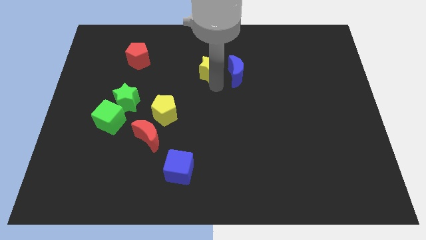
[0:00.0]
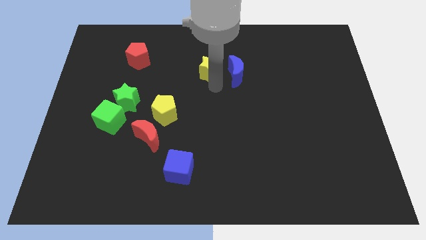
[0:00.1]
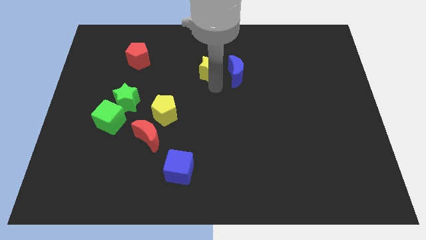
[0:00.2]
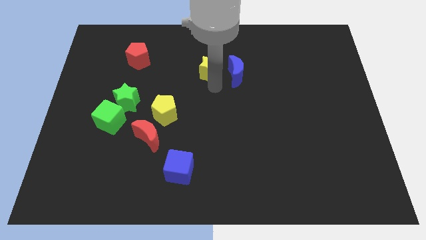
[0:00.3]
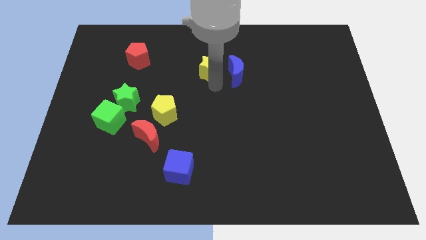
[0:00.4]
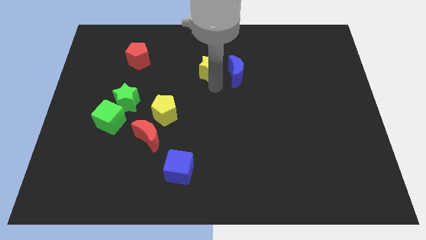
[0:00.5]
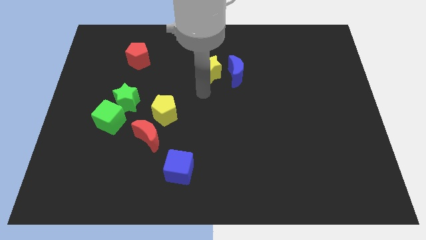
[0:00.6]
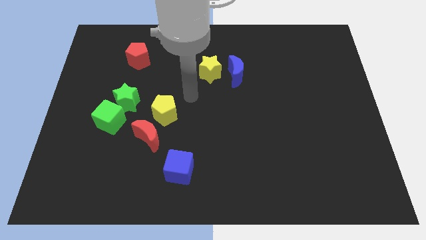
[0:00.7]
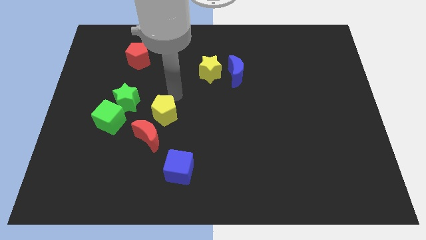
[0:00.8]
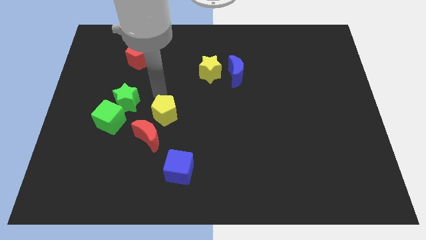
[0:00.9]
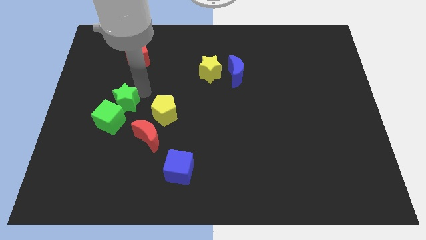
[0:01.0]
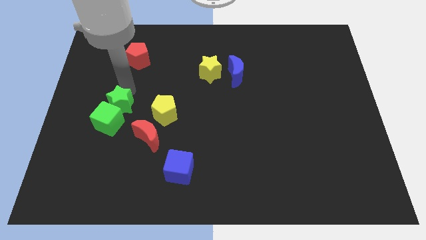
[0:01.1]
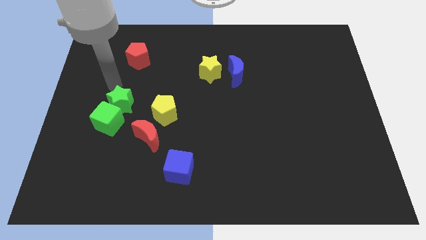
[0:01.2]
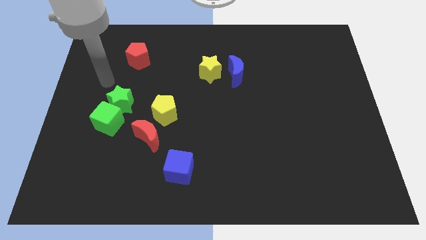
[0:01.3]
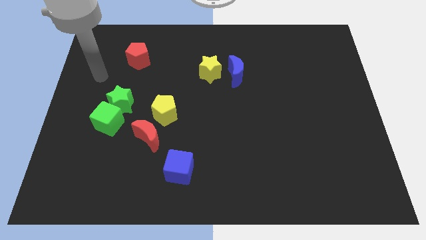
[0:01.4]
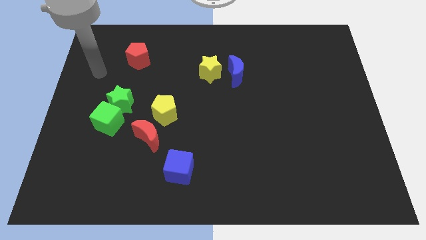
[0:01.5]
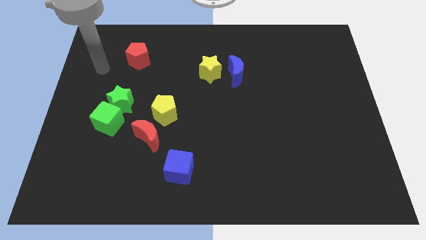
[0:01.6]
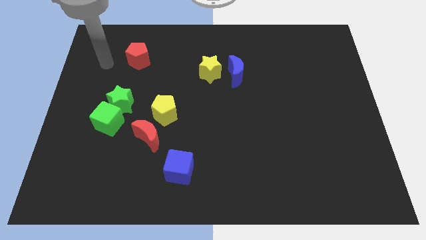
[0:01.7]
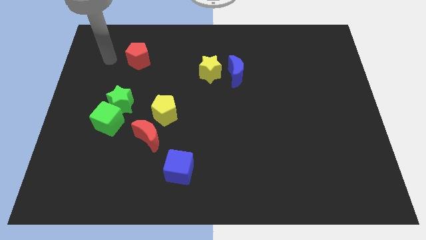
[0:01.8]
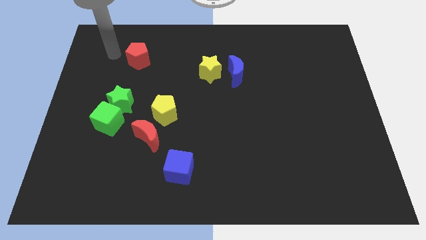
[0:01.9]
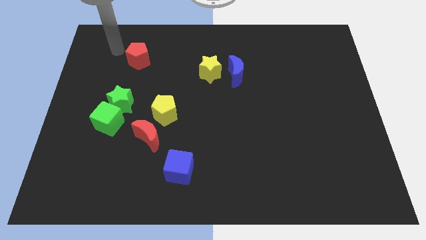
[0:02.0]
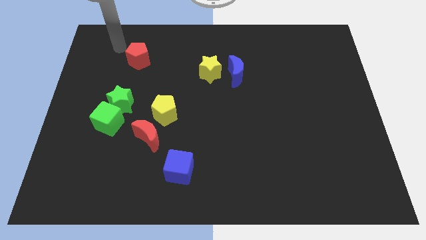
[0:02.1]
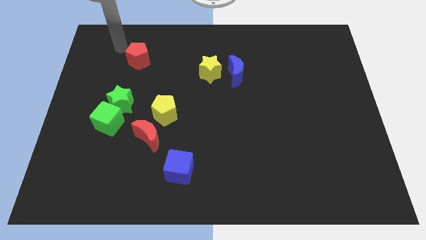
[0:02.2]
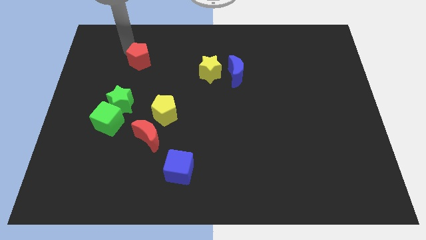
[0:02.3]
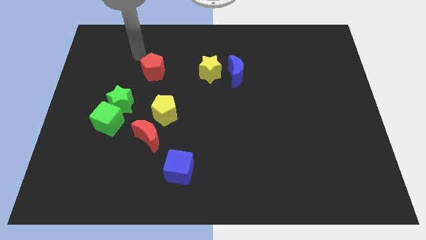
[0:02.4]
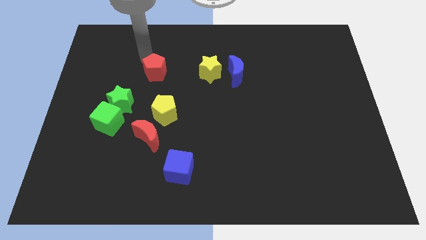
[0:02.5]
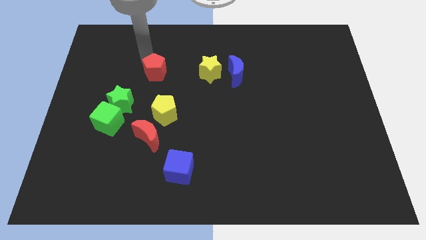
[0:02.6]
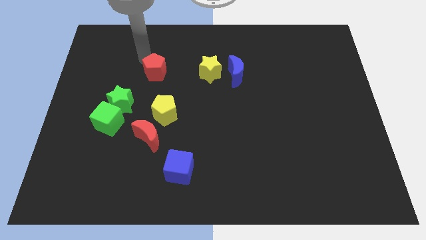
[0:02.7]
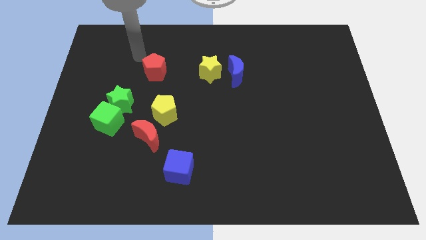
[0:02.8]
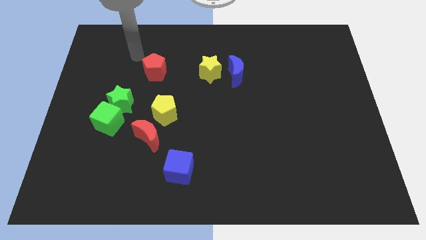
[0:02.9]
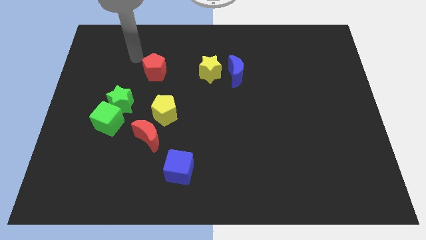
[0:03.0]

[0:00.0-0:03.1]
slide red pentagon towards yellow pentagon

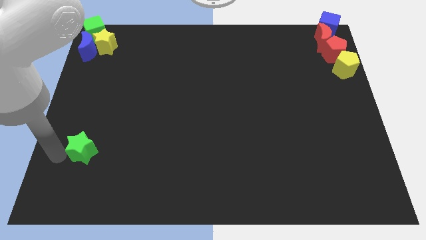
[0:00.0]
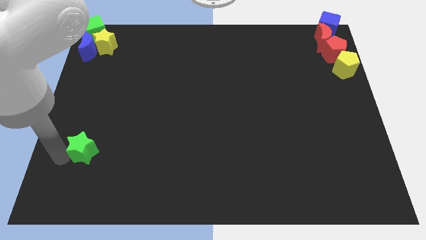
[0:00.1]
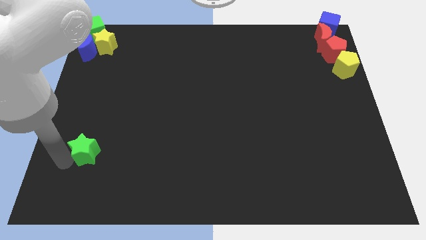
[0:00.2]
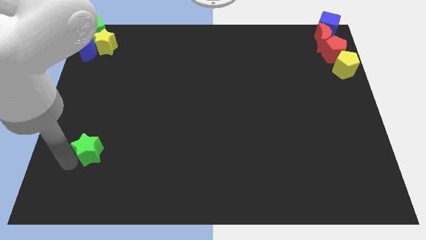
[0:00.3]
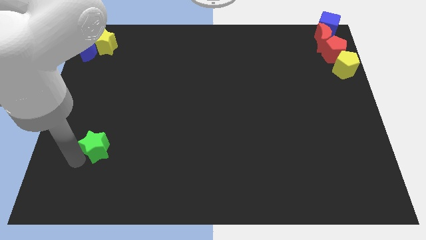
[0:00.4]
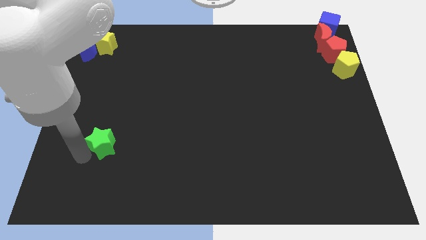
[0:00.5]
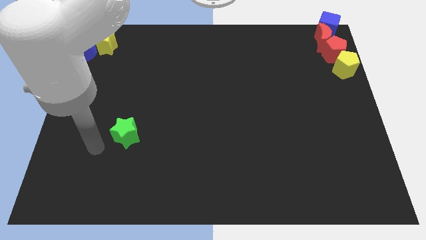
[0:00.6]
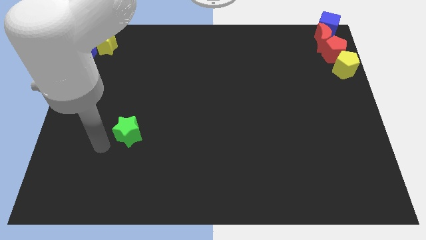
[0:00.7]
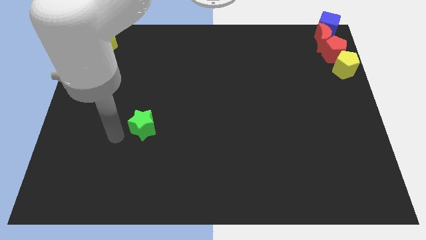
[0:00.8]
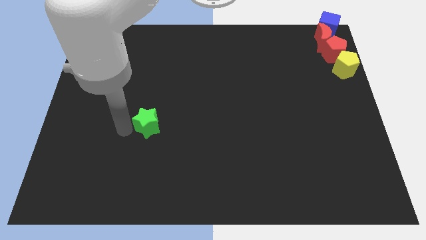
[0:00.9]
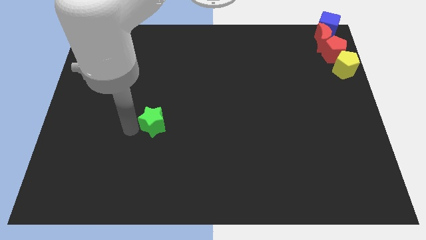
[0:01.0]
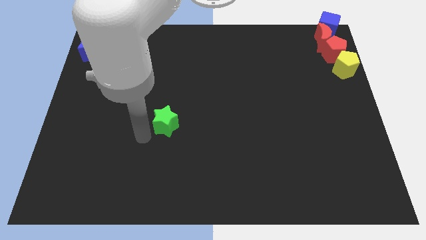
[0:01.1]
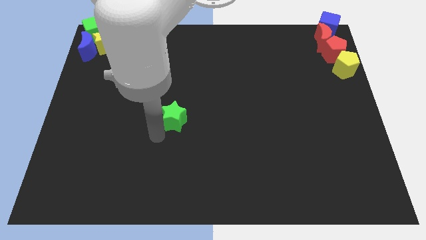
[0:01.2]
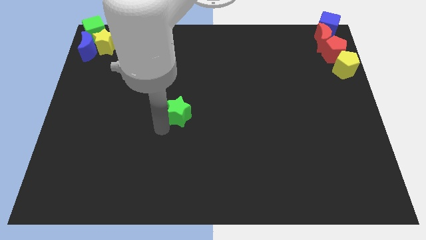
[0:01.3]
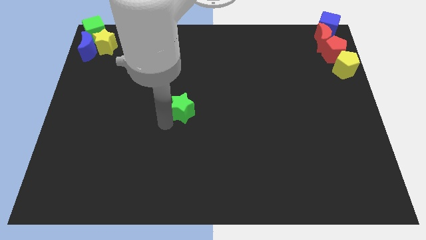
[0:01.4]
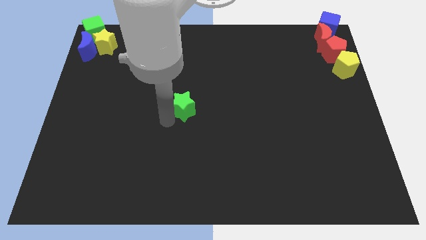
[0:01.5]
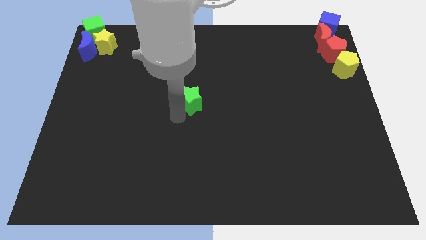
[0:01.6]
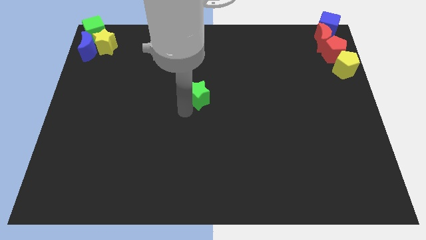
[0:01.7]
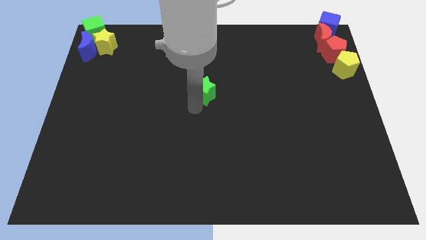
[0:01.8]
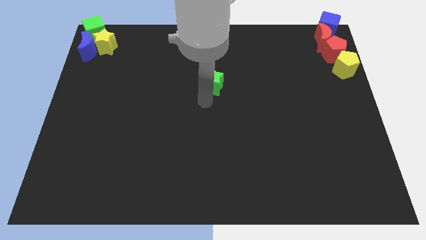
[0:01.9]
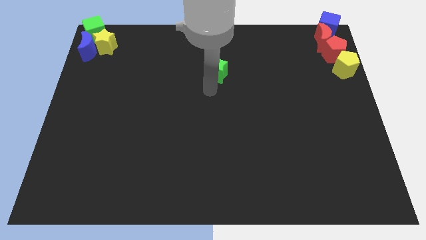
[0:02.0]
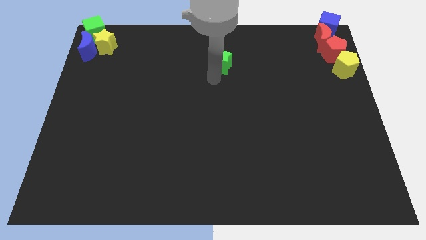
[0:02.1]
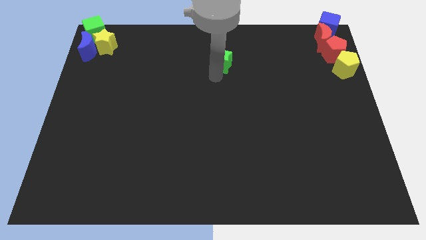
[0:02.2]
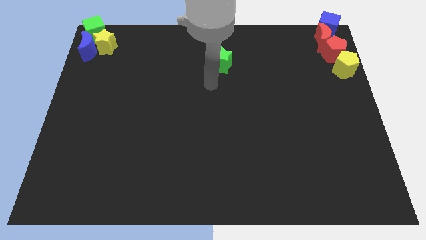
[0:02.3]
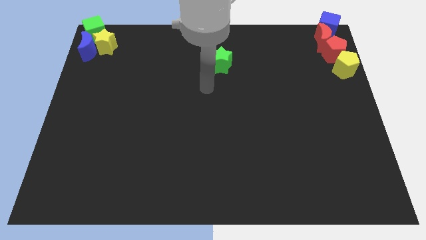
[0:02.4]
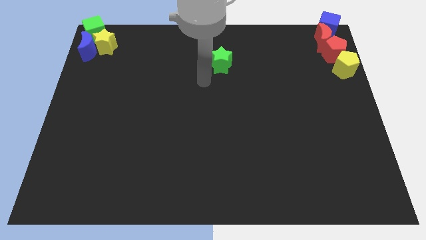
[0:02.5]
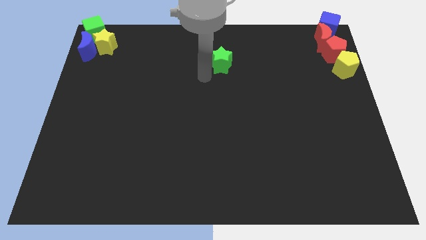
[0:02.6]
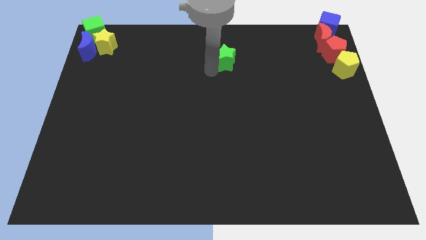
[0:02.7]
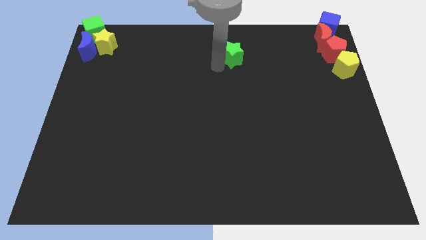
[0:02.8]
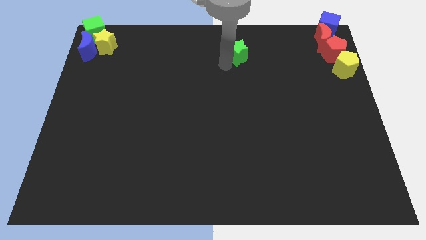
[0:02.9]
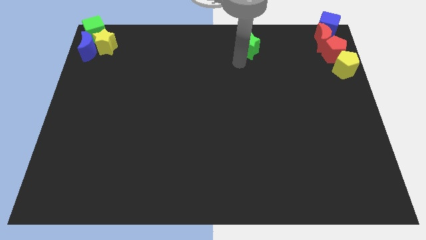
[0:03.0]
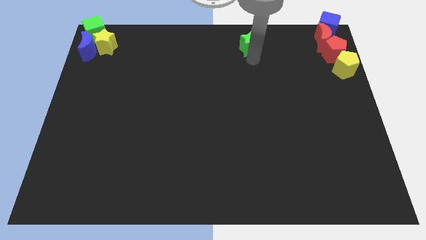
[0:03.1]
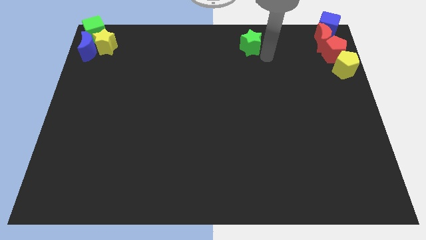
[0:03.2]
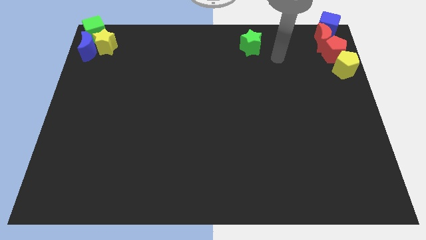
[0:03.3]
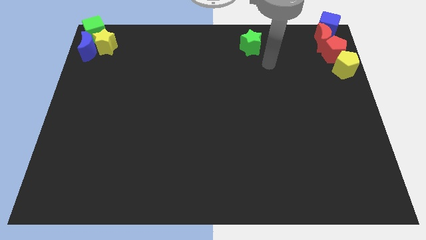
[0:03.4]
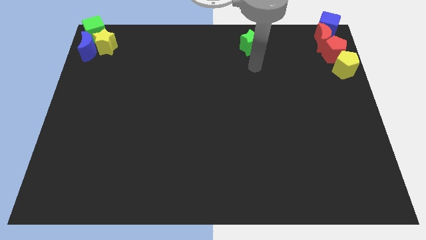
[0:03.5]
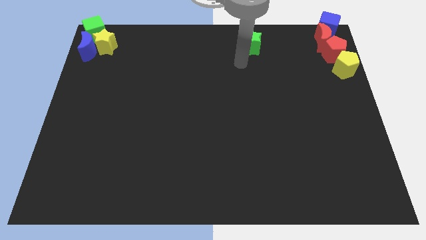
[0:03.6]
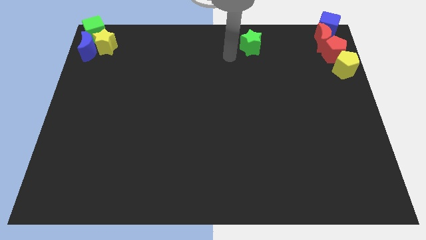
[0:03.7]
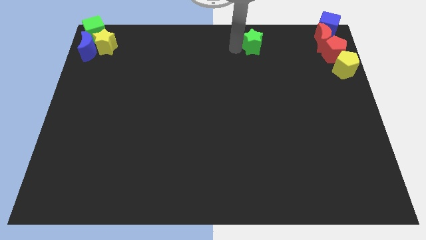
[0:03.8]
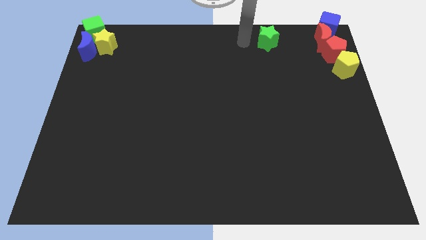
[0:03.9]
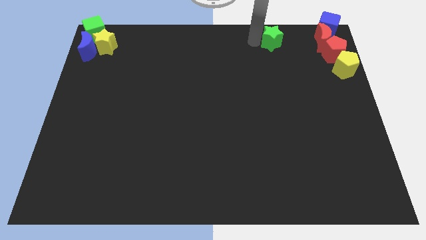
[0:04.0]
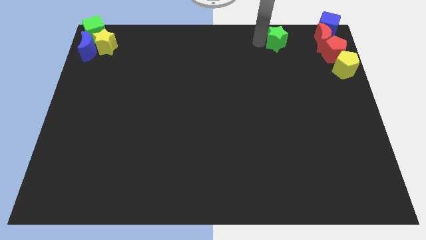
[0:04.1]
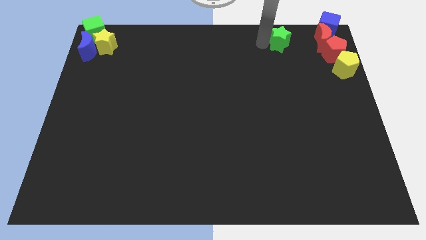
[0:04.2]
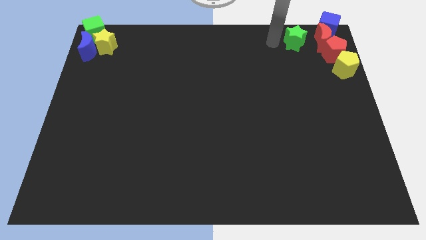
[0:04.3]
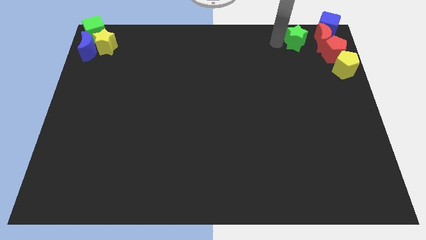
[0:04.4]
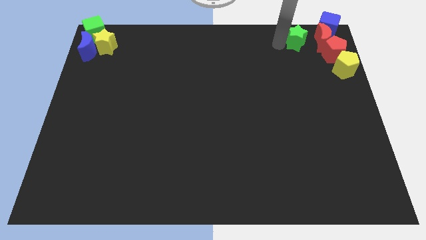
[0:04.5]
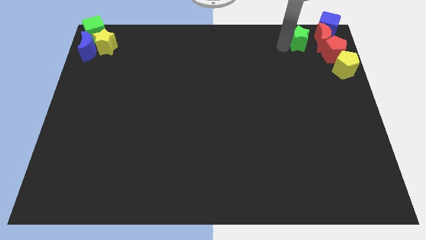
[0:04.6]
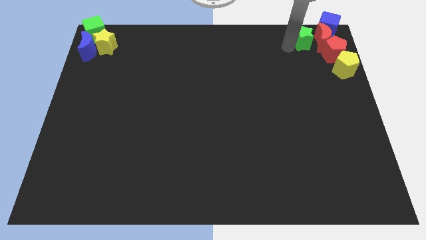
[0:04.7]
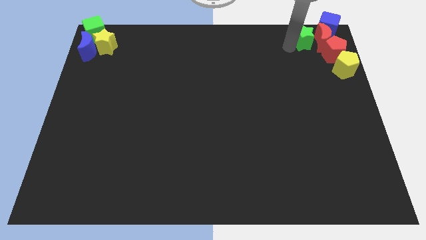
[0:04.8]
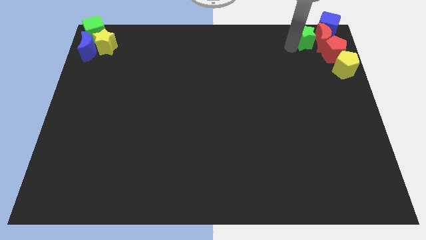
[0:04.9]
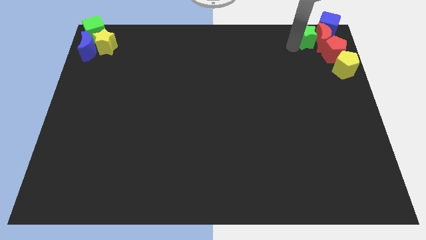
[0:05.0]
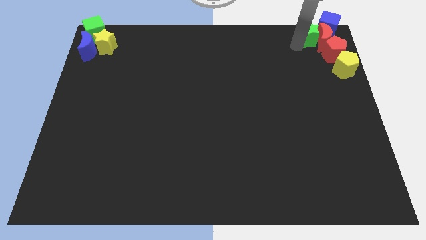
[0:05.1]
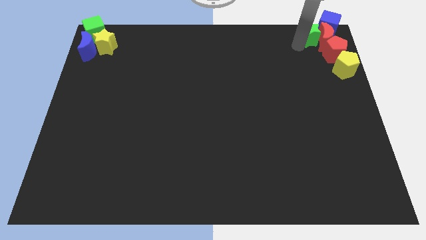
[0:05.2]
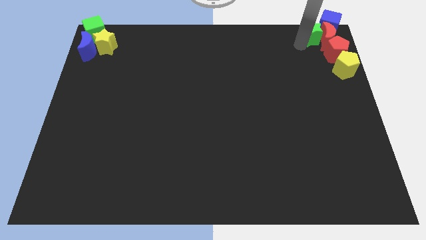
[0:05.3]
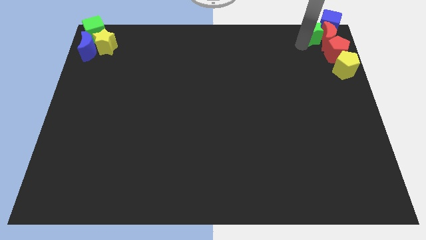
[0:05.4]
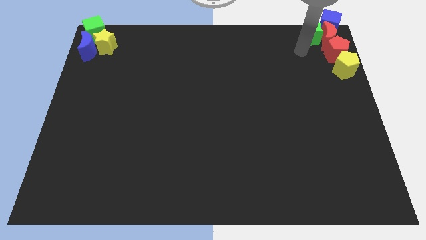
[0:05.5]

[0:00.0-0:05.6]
push the green star to the left side of the red crescent
